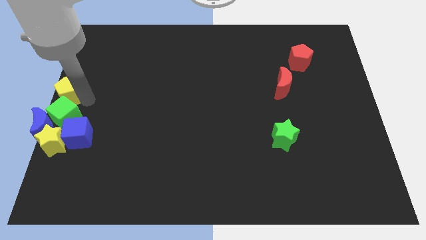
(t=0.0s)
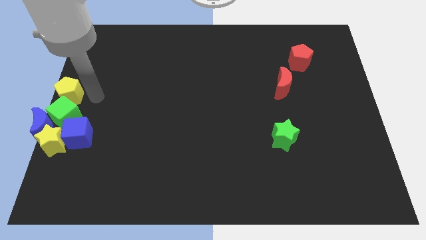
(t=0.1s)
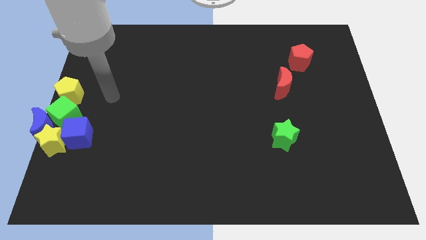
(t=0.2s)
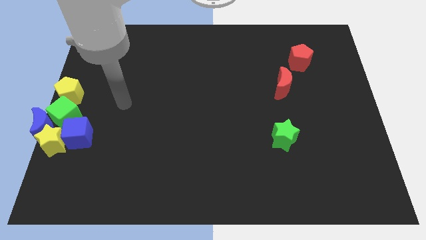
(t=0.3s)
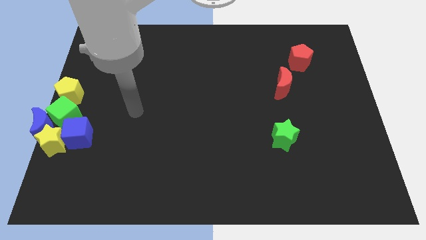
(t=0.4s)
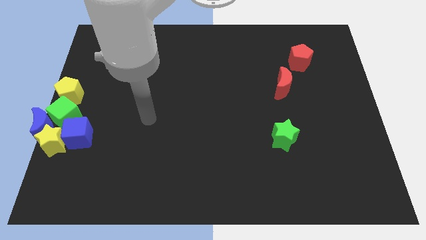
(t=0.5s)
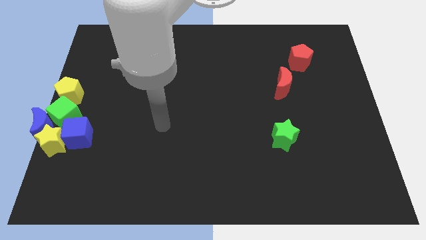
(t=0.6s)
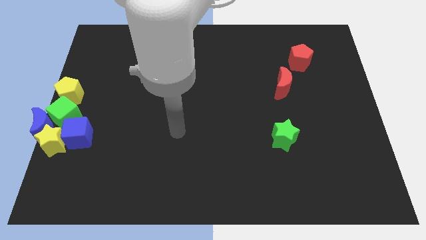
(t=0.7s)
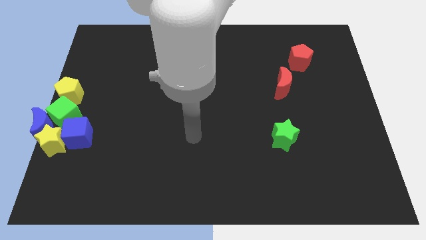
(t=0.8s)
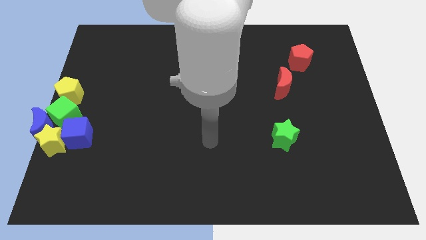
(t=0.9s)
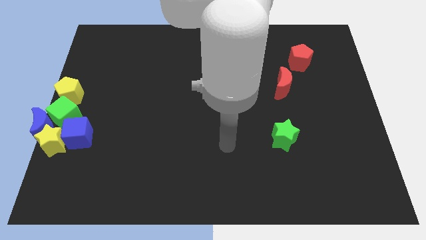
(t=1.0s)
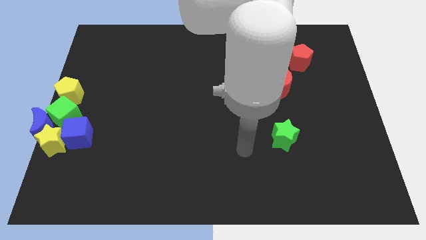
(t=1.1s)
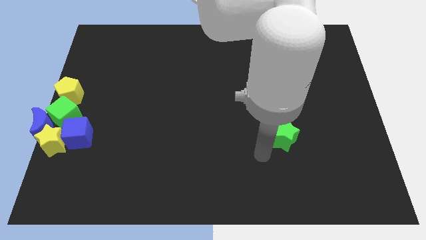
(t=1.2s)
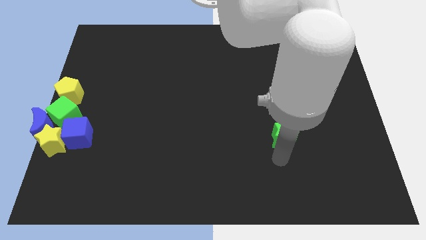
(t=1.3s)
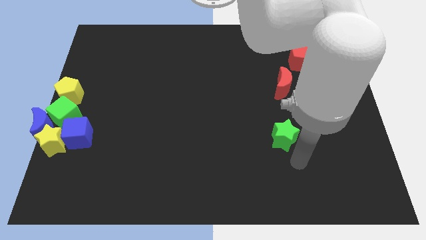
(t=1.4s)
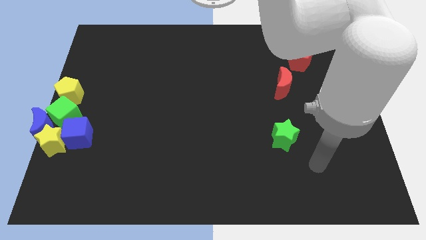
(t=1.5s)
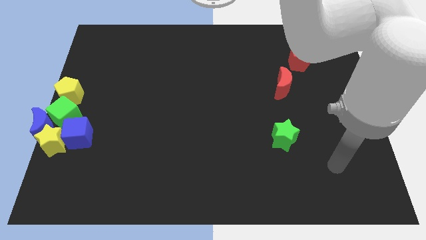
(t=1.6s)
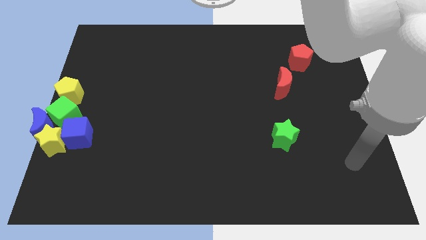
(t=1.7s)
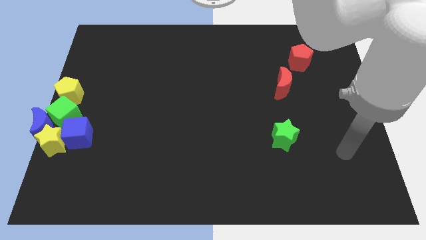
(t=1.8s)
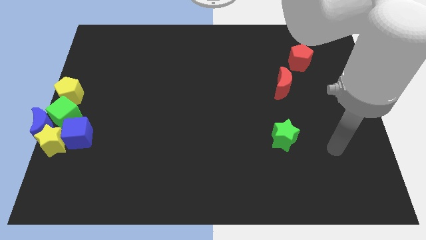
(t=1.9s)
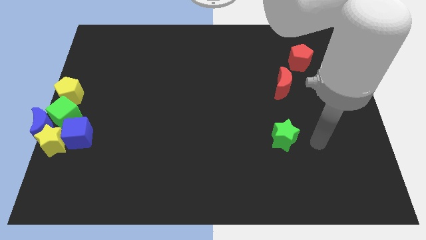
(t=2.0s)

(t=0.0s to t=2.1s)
put your hand parallel right to the green star

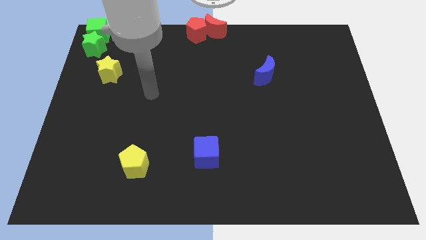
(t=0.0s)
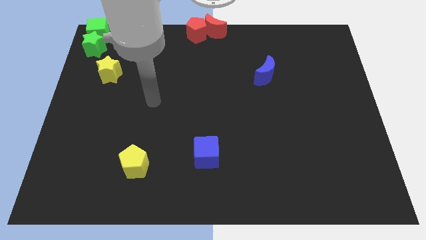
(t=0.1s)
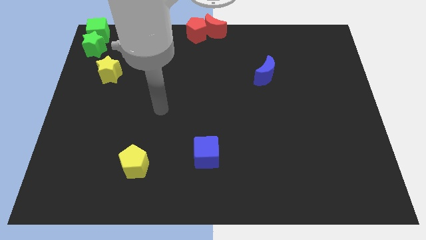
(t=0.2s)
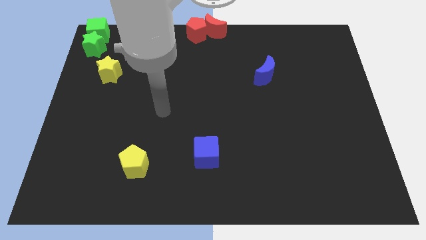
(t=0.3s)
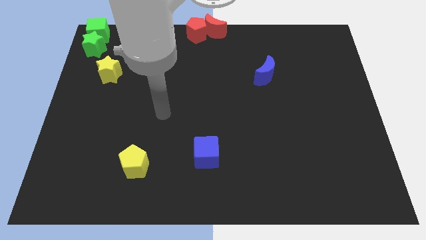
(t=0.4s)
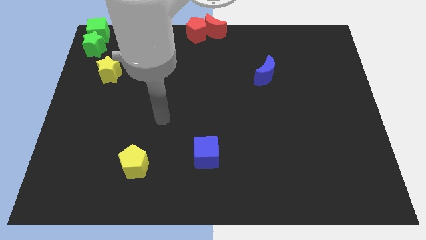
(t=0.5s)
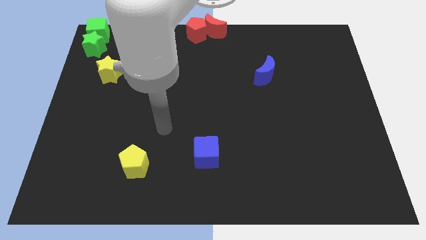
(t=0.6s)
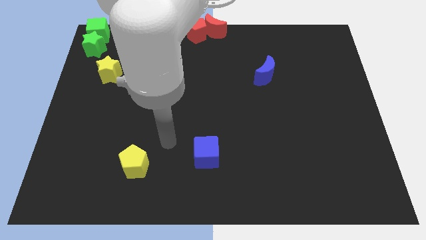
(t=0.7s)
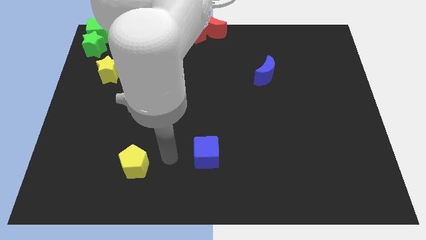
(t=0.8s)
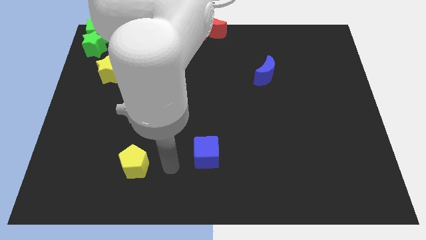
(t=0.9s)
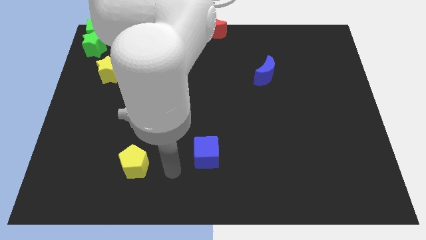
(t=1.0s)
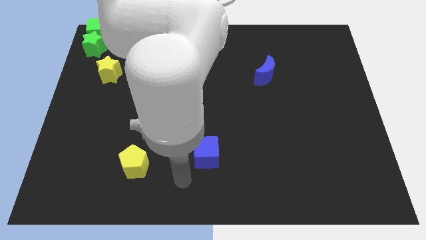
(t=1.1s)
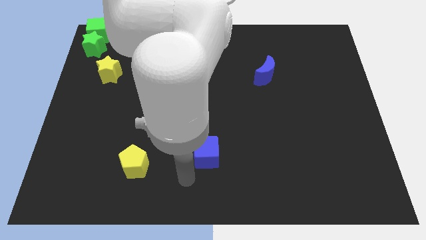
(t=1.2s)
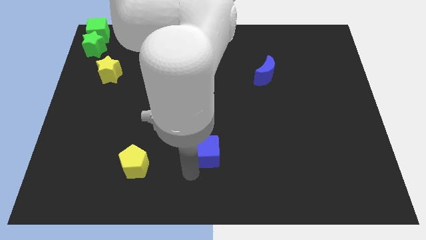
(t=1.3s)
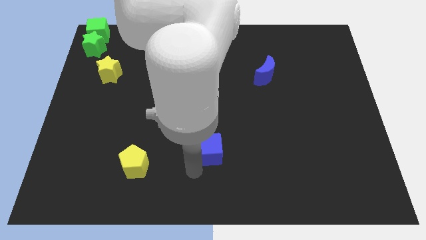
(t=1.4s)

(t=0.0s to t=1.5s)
place your arm near the blue cube

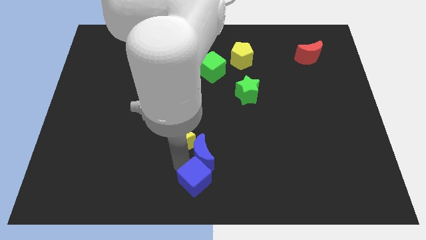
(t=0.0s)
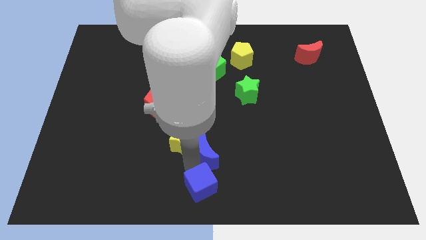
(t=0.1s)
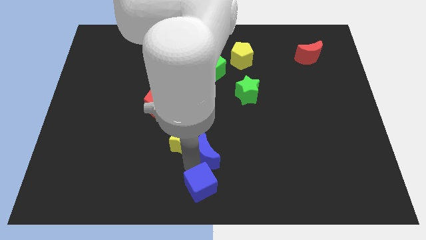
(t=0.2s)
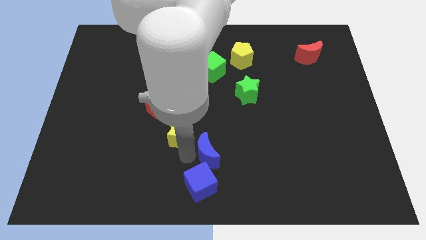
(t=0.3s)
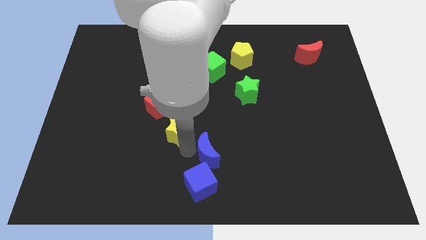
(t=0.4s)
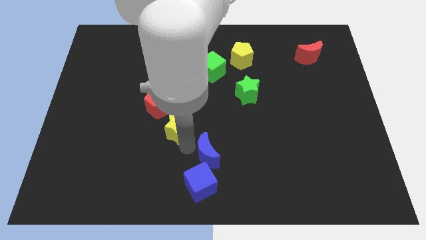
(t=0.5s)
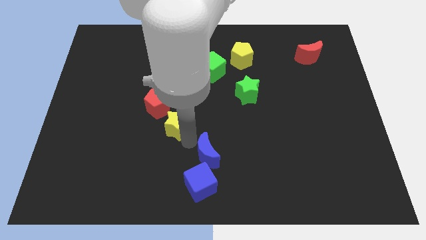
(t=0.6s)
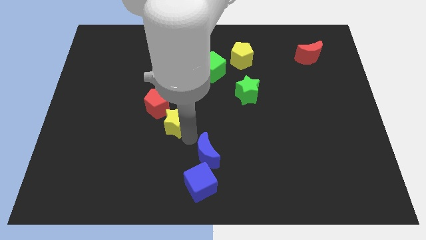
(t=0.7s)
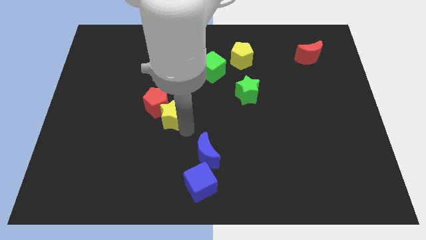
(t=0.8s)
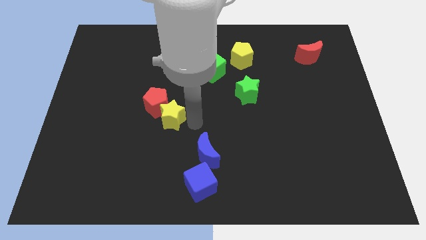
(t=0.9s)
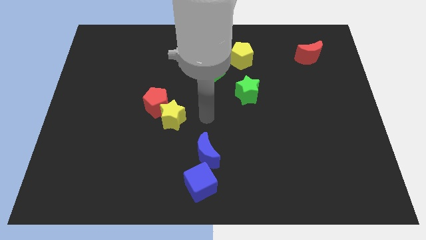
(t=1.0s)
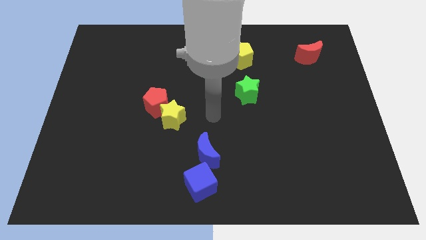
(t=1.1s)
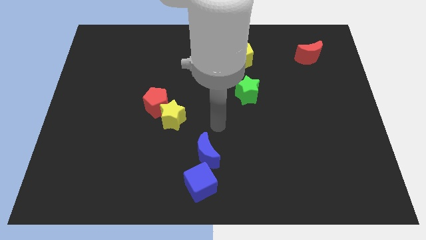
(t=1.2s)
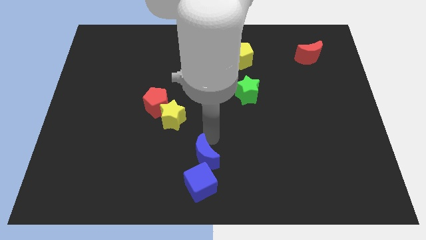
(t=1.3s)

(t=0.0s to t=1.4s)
move the yellow star close to the red pentagon

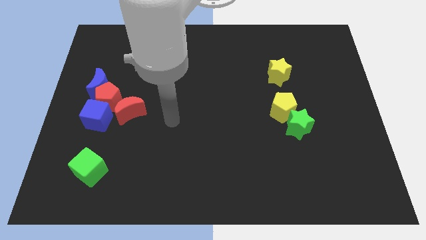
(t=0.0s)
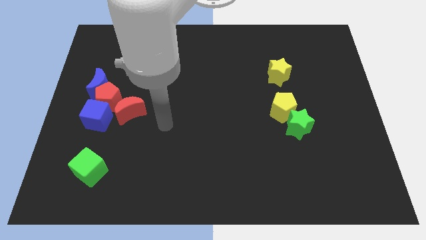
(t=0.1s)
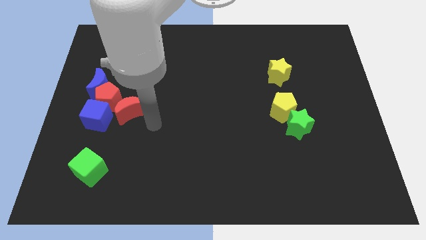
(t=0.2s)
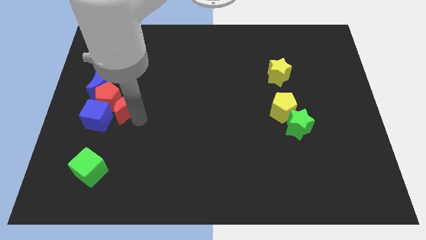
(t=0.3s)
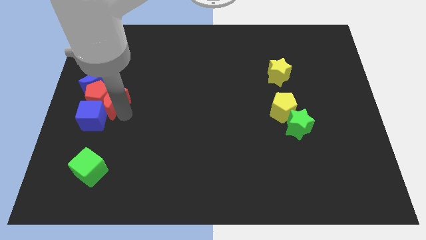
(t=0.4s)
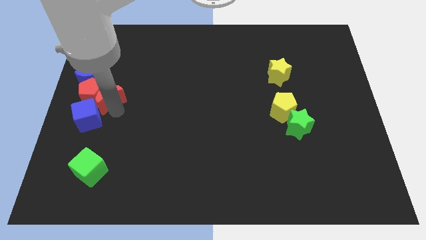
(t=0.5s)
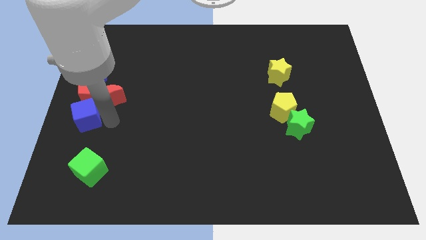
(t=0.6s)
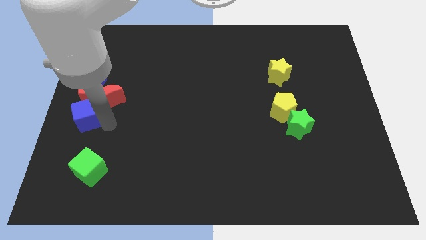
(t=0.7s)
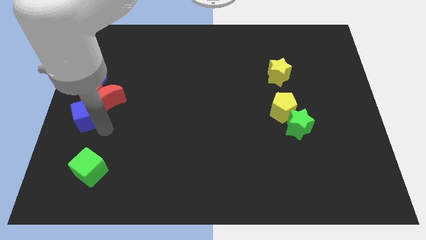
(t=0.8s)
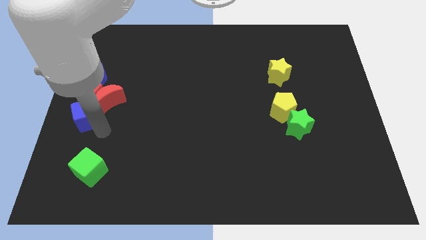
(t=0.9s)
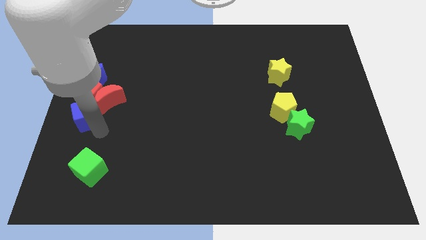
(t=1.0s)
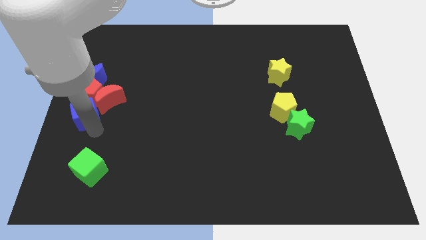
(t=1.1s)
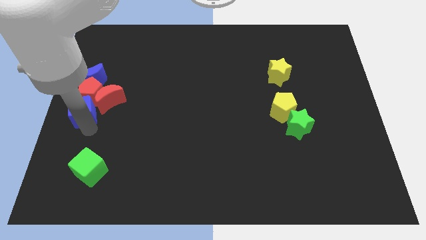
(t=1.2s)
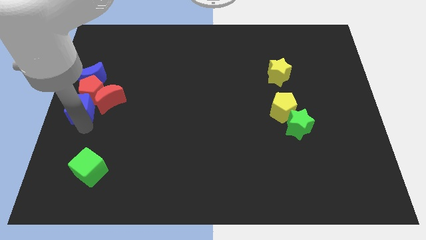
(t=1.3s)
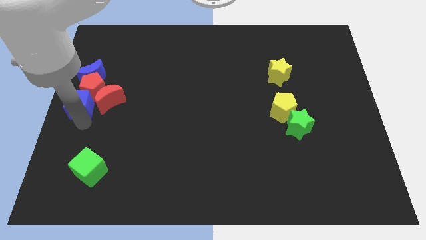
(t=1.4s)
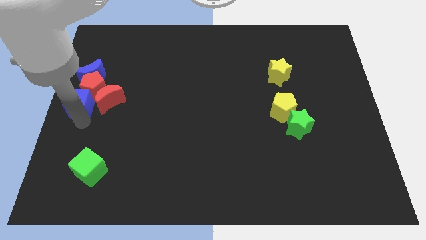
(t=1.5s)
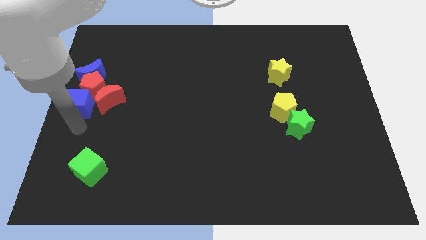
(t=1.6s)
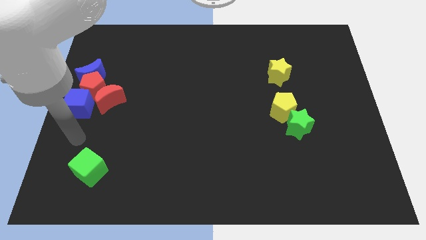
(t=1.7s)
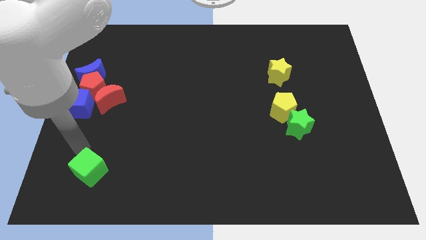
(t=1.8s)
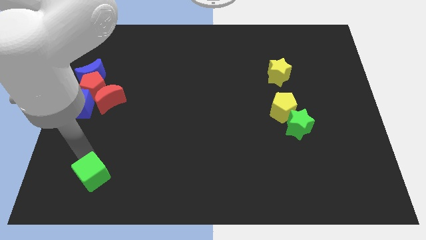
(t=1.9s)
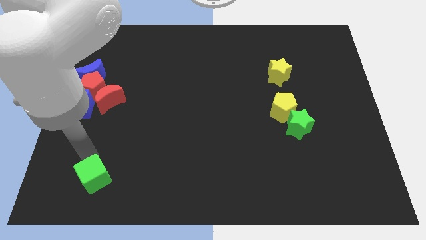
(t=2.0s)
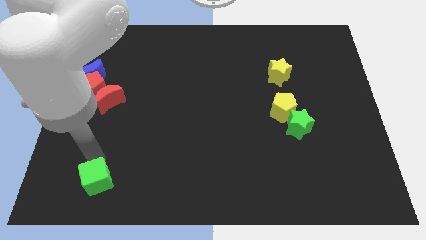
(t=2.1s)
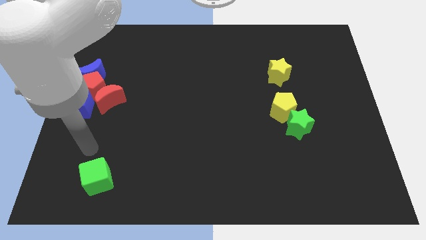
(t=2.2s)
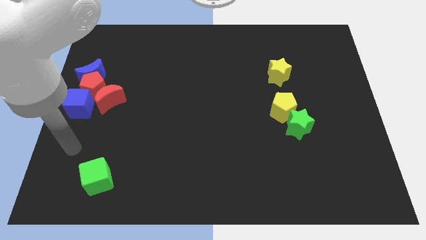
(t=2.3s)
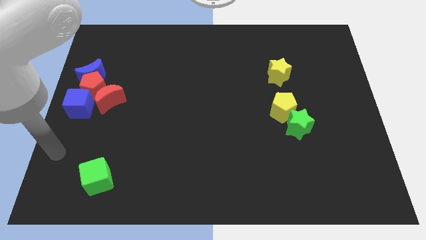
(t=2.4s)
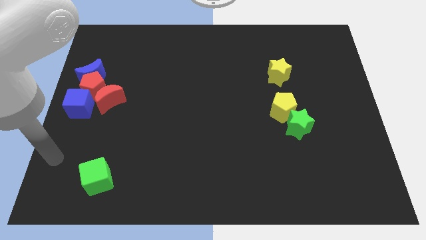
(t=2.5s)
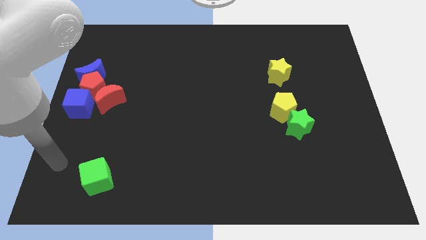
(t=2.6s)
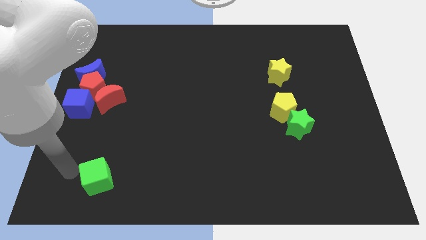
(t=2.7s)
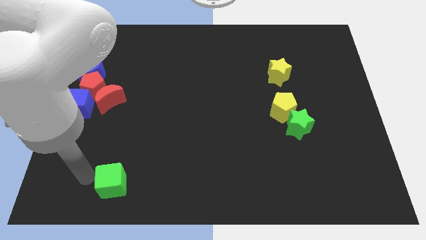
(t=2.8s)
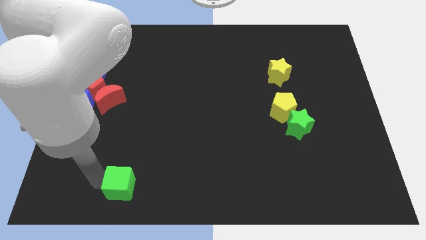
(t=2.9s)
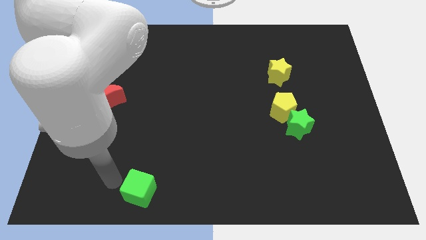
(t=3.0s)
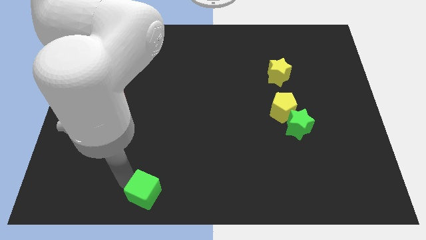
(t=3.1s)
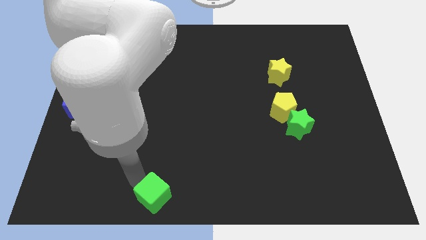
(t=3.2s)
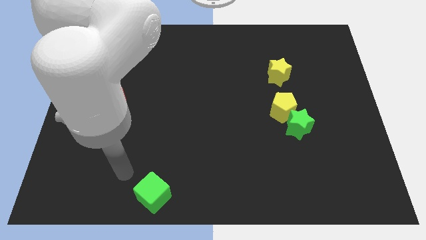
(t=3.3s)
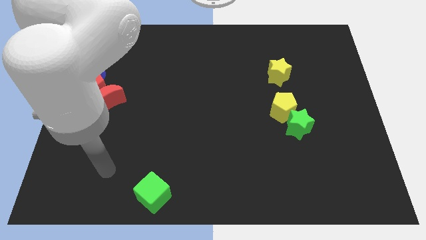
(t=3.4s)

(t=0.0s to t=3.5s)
drag green cube towards right side of the board

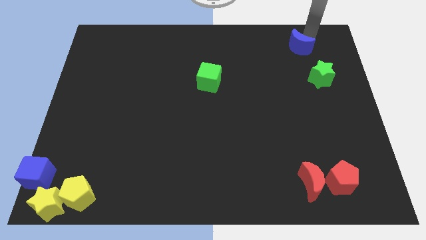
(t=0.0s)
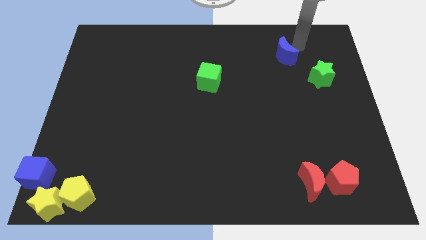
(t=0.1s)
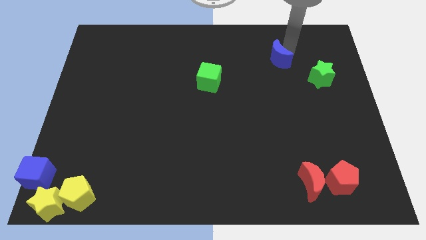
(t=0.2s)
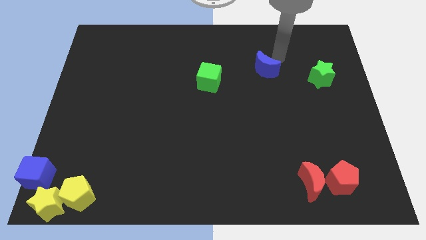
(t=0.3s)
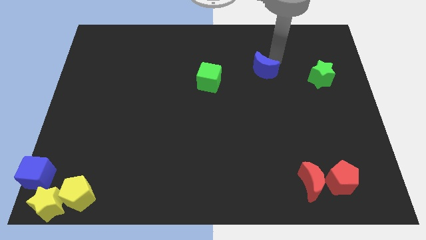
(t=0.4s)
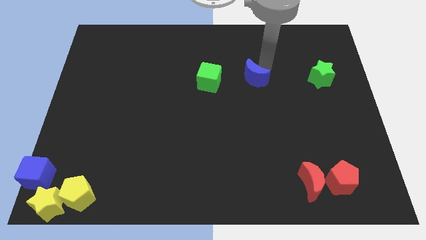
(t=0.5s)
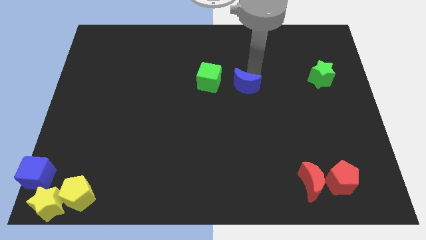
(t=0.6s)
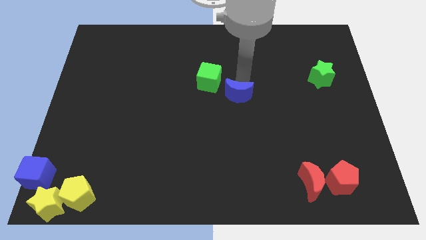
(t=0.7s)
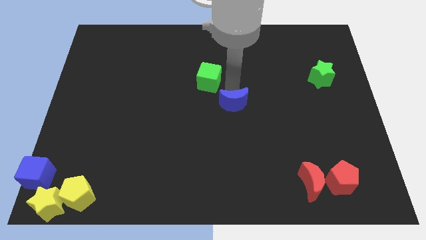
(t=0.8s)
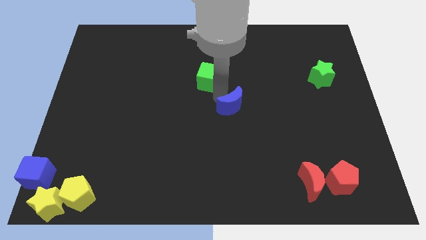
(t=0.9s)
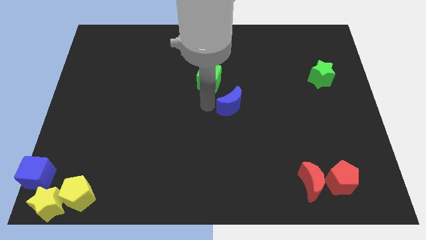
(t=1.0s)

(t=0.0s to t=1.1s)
move blue moon at center
